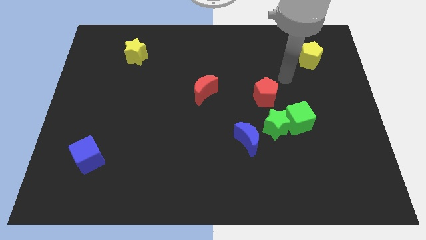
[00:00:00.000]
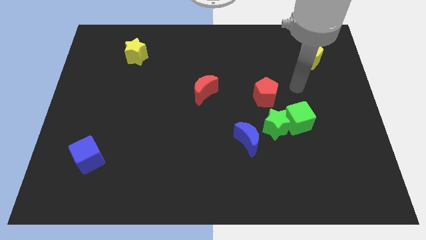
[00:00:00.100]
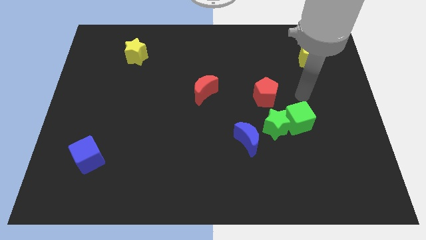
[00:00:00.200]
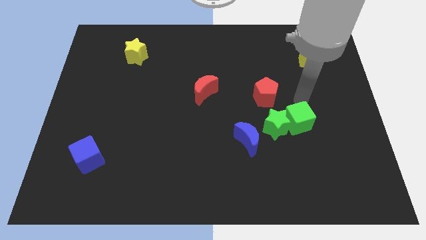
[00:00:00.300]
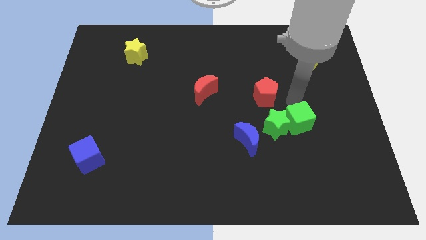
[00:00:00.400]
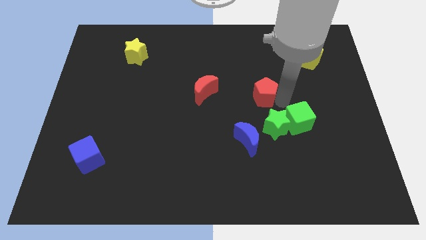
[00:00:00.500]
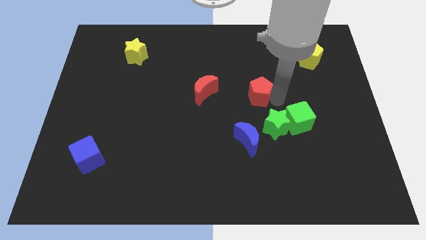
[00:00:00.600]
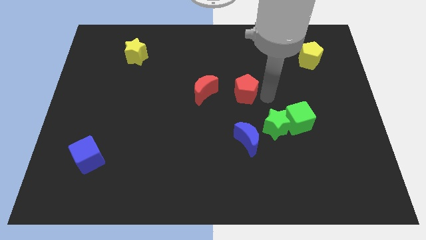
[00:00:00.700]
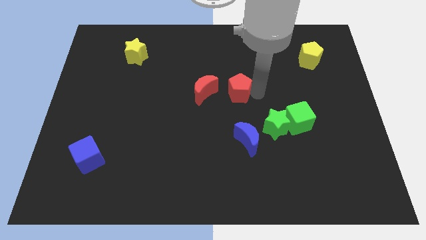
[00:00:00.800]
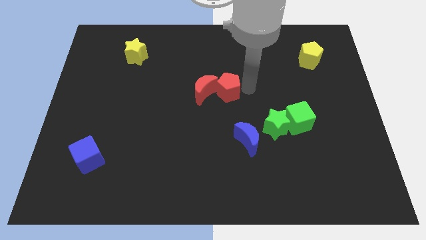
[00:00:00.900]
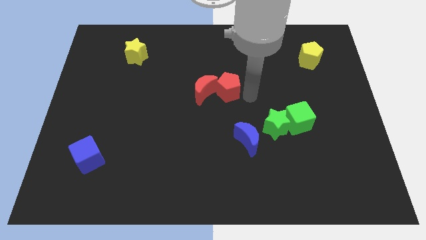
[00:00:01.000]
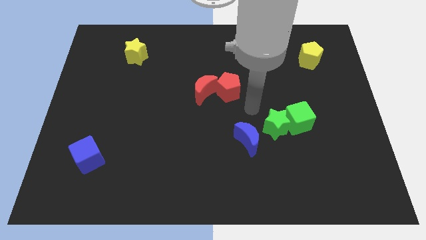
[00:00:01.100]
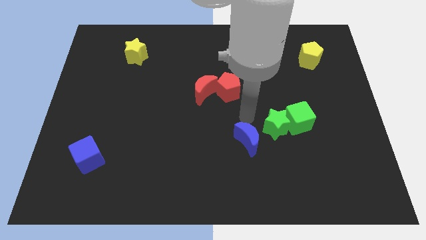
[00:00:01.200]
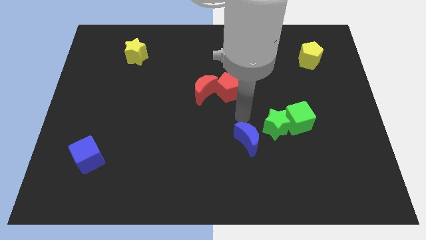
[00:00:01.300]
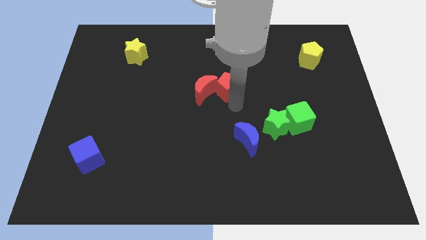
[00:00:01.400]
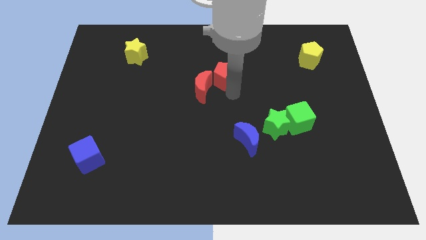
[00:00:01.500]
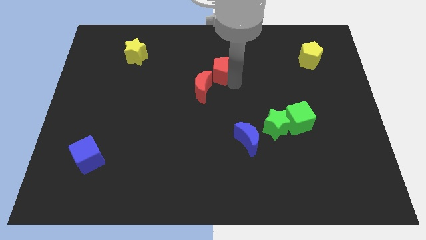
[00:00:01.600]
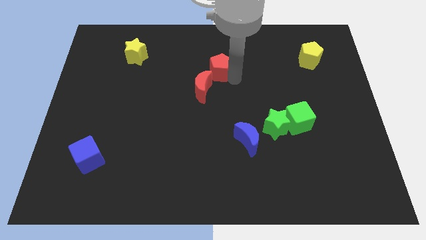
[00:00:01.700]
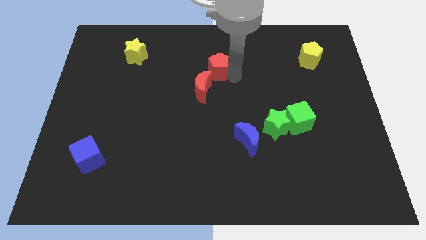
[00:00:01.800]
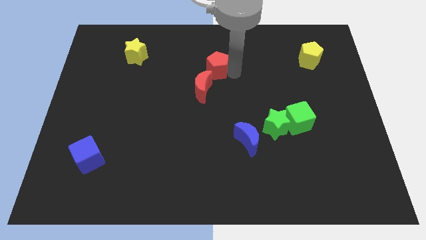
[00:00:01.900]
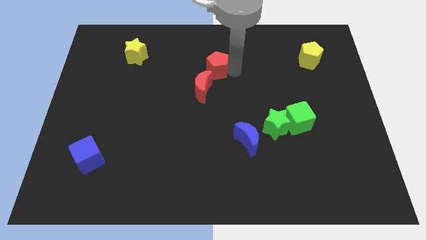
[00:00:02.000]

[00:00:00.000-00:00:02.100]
place red pentagon at the top of red moon

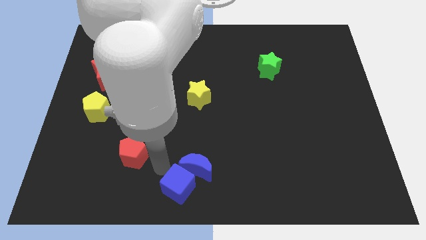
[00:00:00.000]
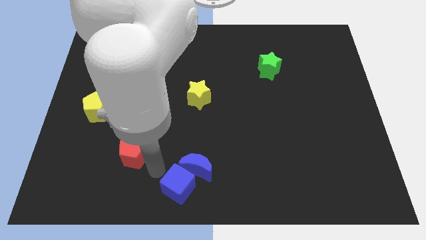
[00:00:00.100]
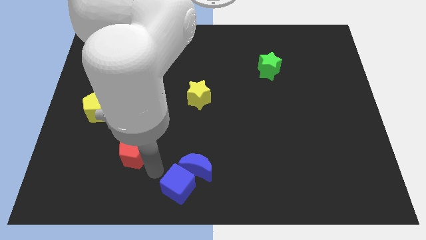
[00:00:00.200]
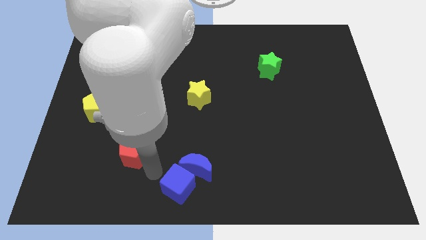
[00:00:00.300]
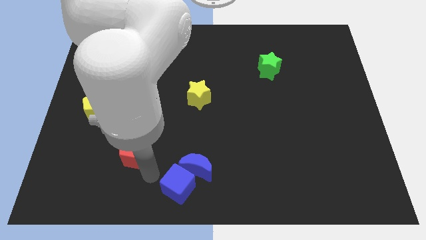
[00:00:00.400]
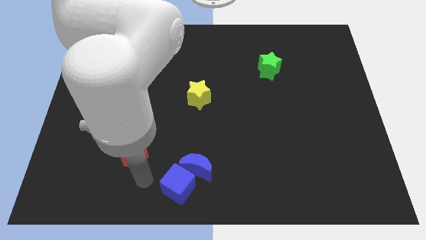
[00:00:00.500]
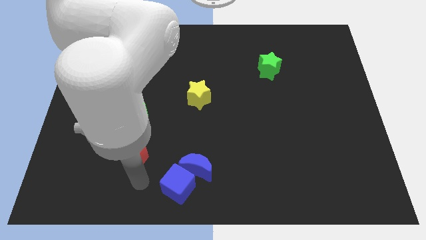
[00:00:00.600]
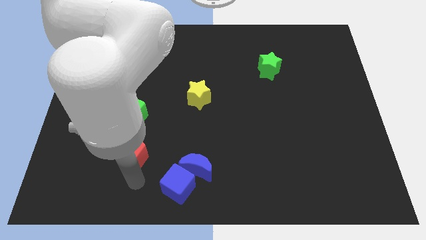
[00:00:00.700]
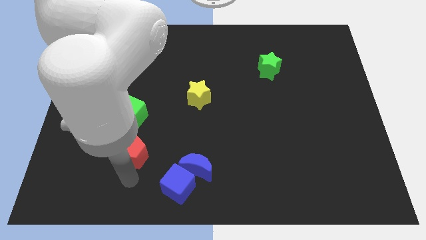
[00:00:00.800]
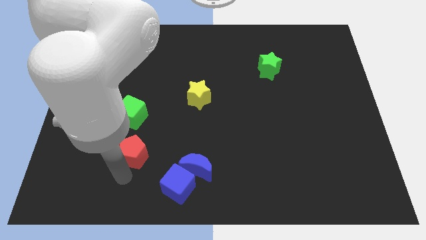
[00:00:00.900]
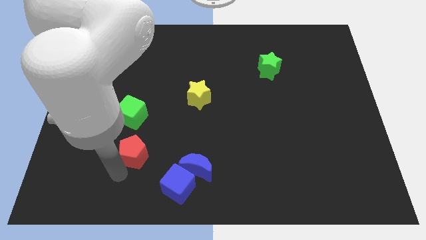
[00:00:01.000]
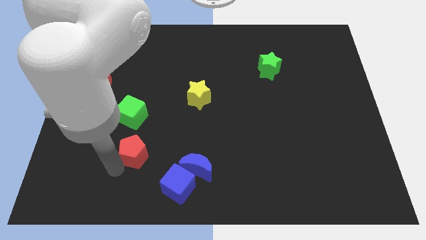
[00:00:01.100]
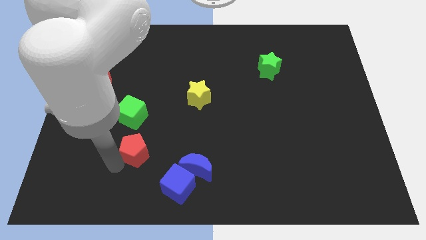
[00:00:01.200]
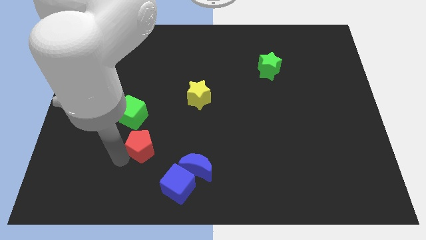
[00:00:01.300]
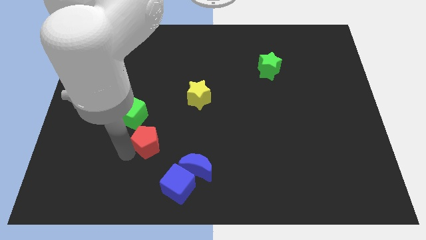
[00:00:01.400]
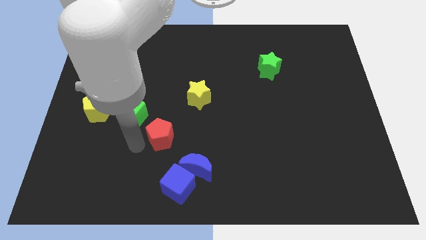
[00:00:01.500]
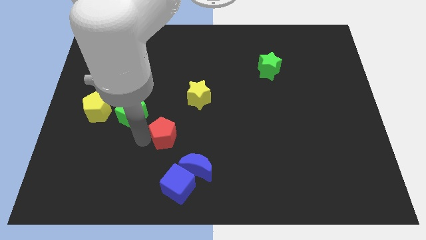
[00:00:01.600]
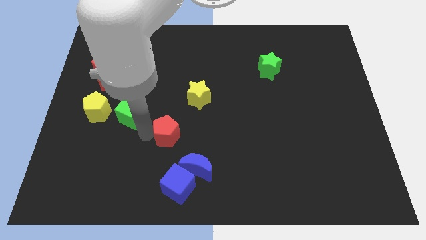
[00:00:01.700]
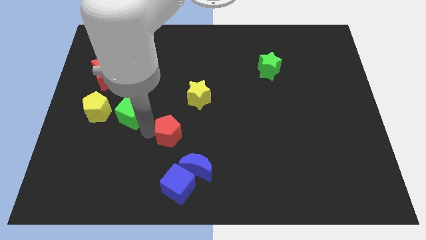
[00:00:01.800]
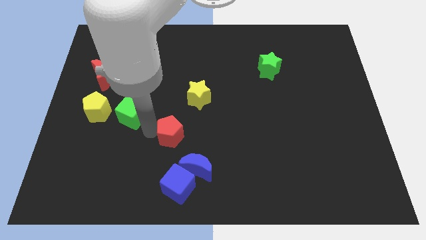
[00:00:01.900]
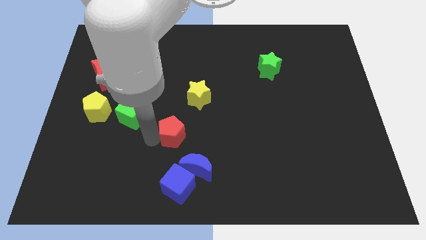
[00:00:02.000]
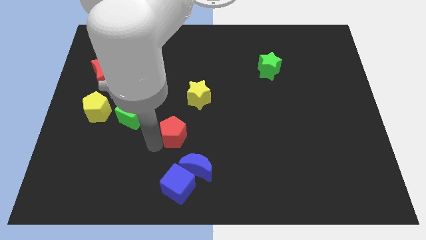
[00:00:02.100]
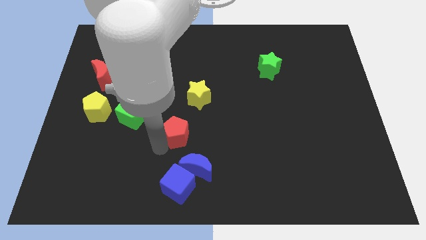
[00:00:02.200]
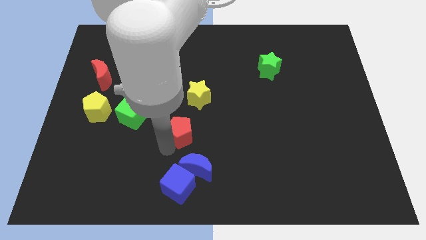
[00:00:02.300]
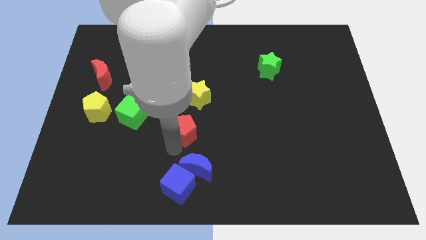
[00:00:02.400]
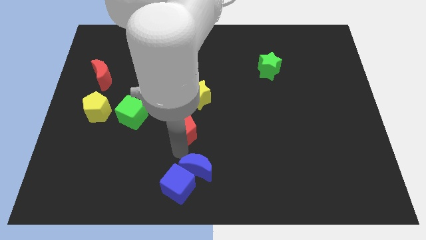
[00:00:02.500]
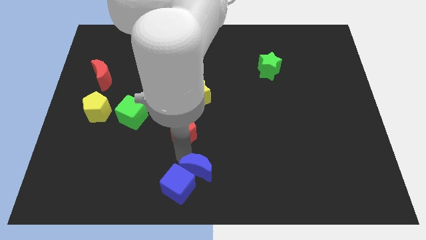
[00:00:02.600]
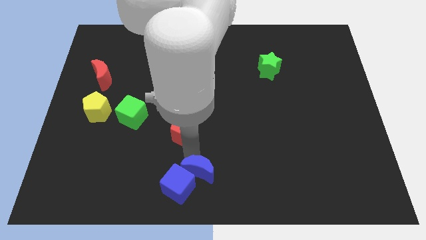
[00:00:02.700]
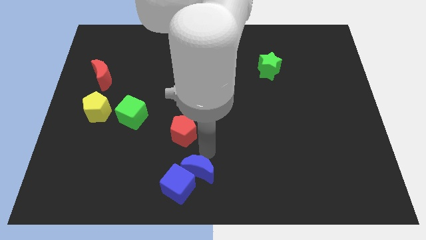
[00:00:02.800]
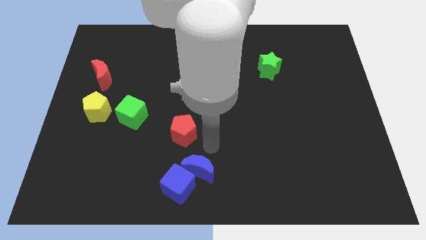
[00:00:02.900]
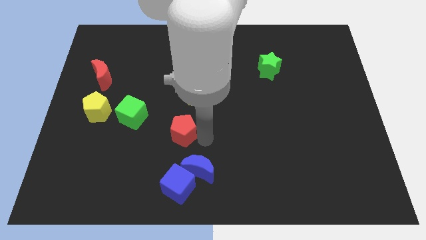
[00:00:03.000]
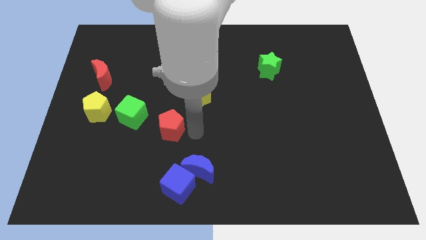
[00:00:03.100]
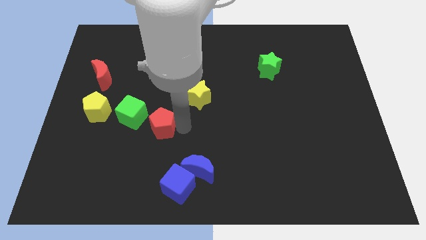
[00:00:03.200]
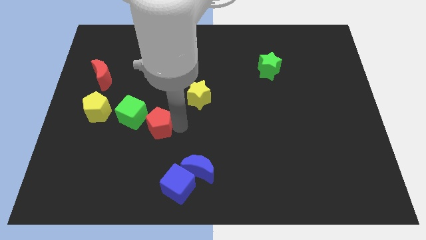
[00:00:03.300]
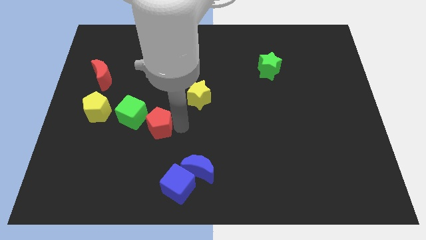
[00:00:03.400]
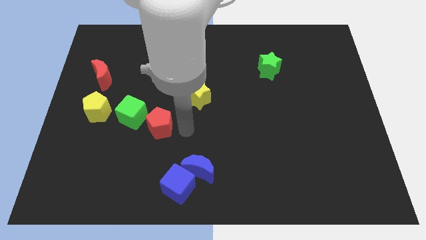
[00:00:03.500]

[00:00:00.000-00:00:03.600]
place the red pentagon to the right side of the green cube

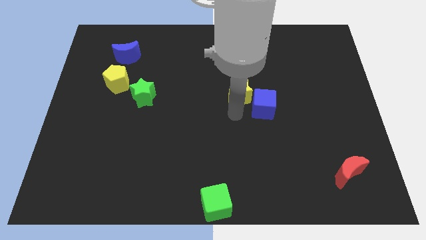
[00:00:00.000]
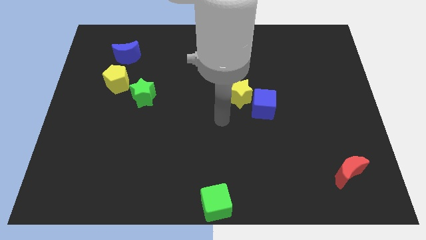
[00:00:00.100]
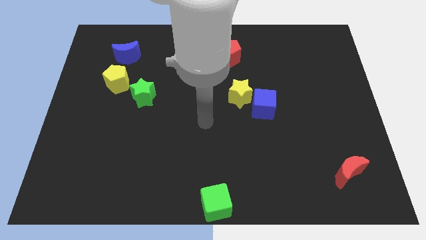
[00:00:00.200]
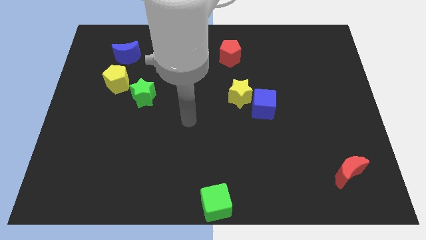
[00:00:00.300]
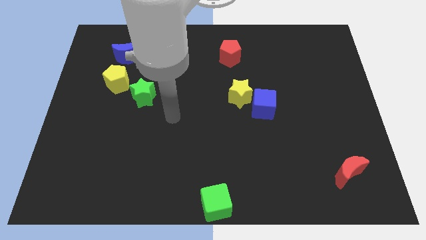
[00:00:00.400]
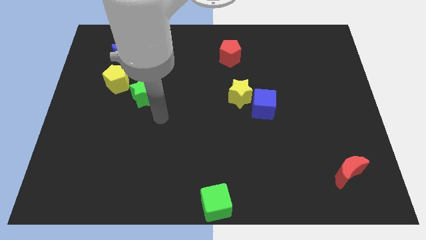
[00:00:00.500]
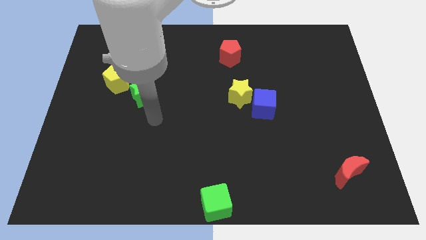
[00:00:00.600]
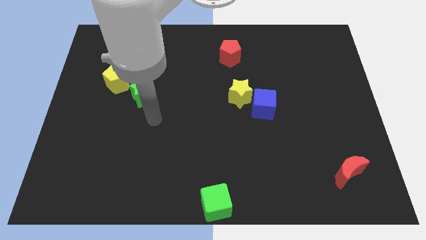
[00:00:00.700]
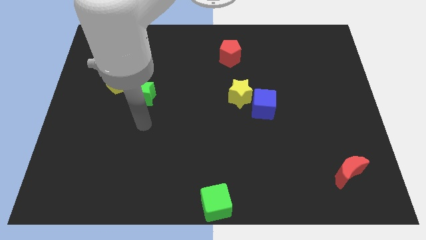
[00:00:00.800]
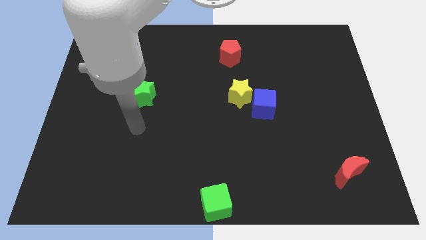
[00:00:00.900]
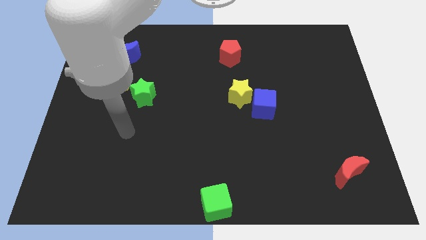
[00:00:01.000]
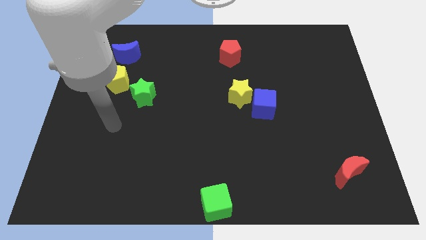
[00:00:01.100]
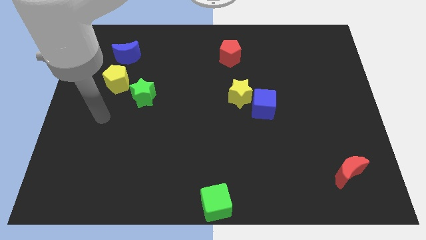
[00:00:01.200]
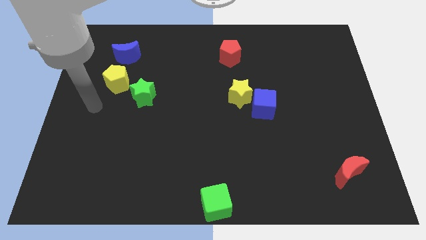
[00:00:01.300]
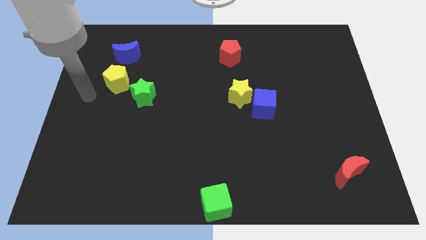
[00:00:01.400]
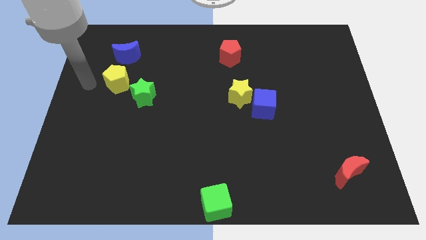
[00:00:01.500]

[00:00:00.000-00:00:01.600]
move your arm to the left side of the yellow pentagon

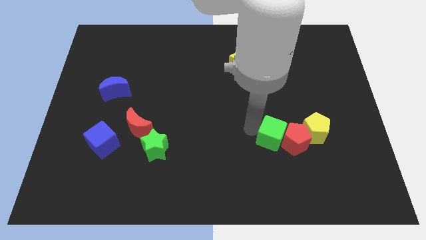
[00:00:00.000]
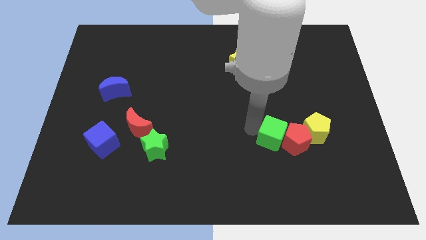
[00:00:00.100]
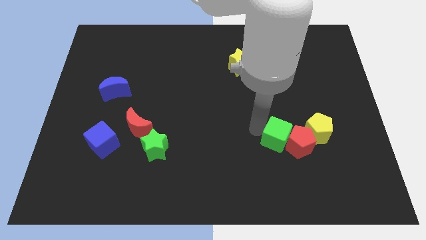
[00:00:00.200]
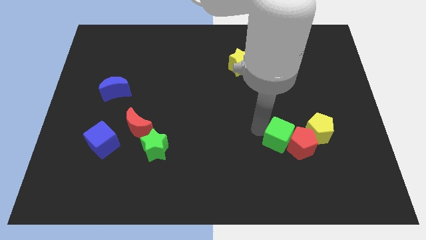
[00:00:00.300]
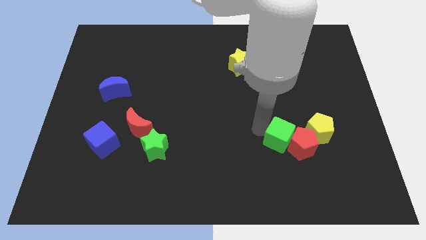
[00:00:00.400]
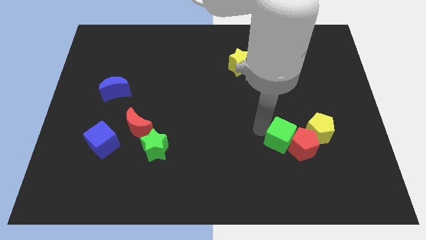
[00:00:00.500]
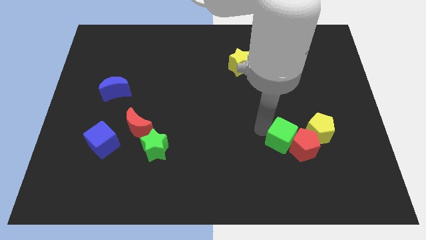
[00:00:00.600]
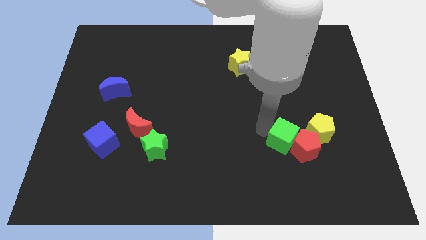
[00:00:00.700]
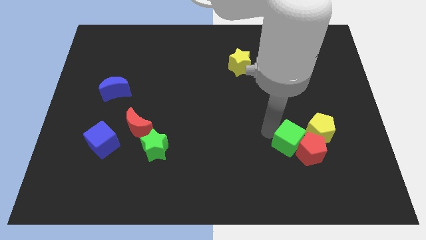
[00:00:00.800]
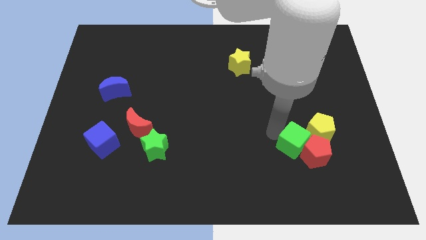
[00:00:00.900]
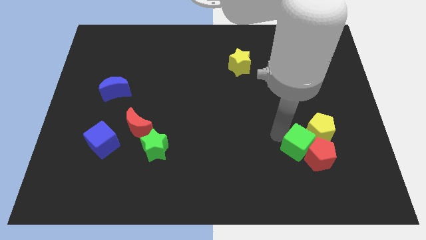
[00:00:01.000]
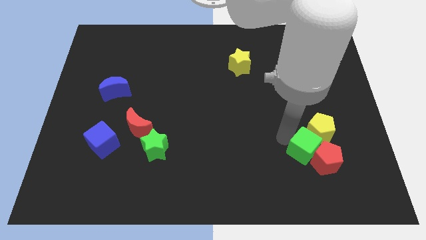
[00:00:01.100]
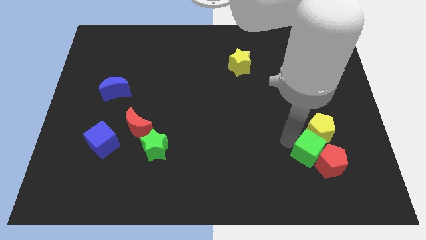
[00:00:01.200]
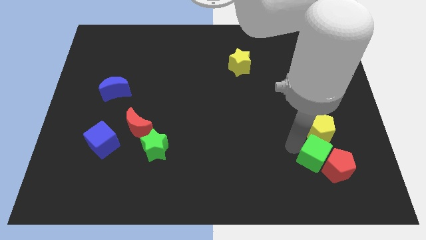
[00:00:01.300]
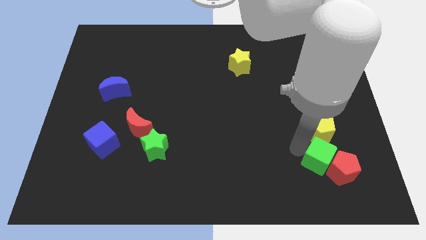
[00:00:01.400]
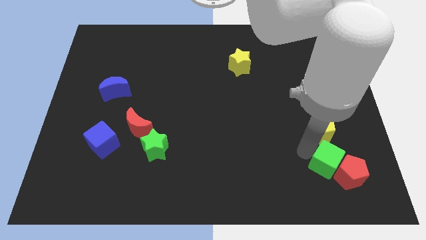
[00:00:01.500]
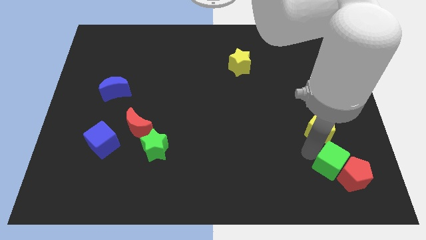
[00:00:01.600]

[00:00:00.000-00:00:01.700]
push the green cube to the bottom of the yellow pentagon
